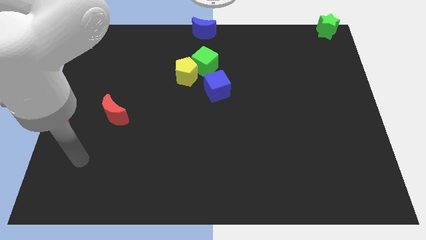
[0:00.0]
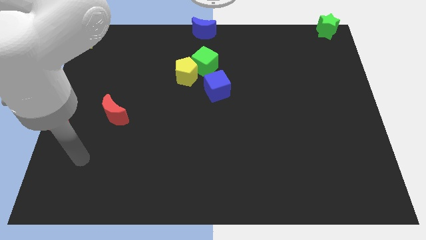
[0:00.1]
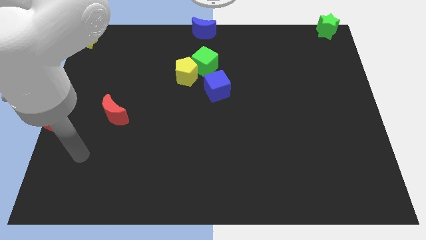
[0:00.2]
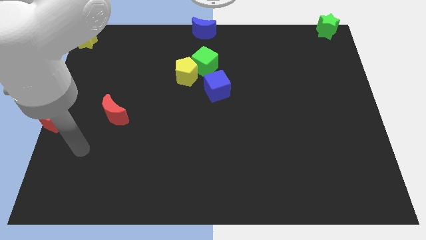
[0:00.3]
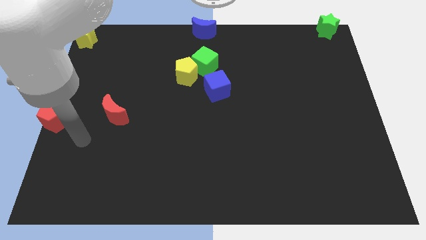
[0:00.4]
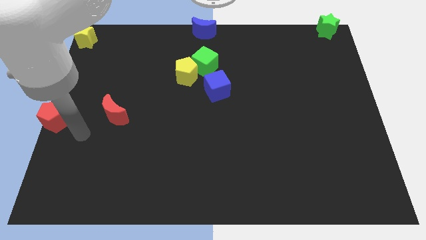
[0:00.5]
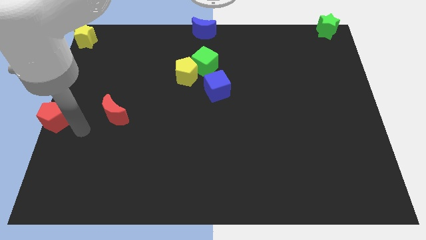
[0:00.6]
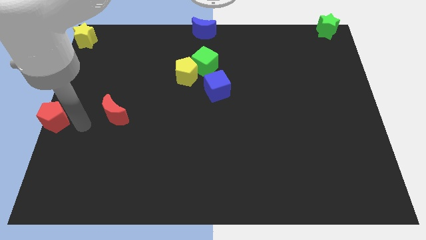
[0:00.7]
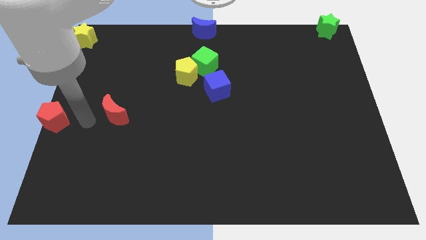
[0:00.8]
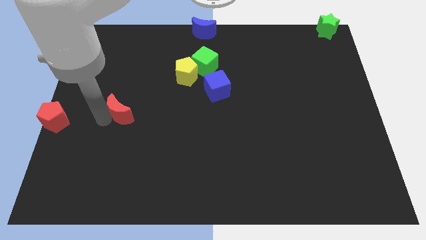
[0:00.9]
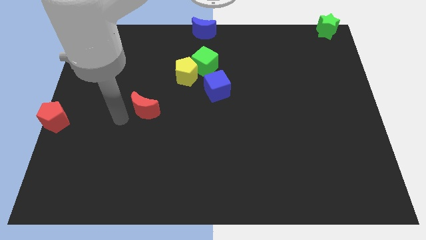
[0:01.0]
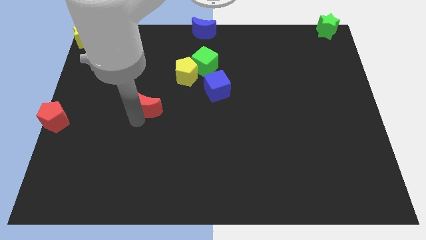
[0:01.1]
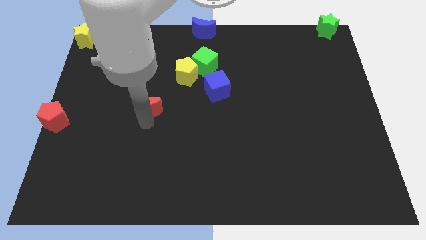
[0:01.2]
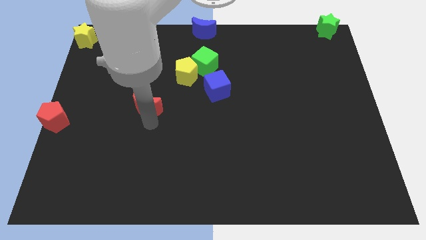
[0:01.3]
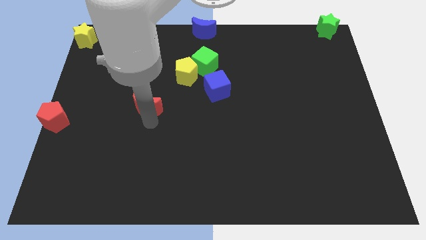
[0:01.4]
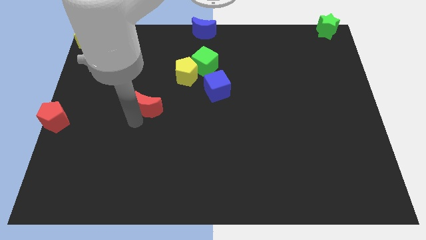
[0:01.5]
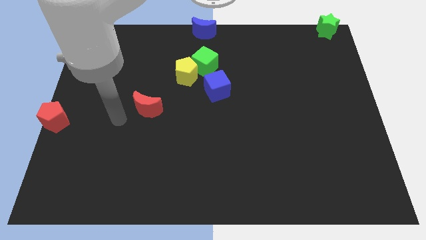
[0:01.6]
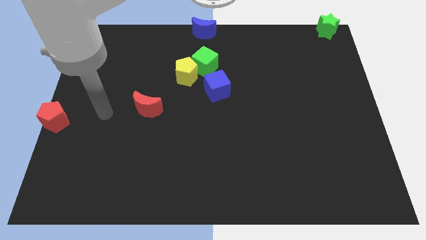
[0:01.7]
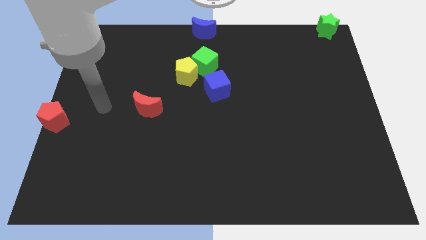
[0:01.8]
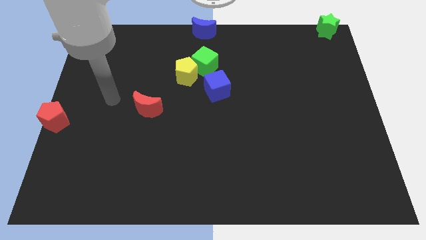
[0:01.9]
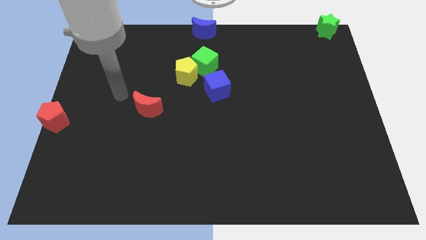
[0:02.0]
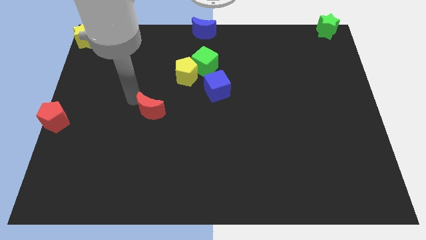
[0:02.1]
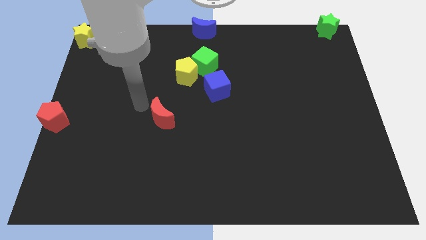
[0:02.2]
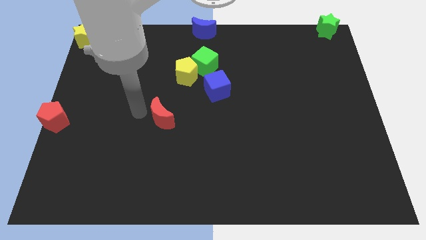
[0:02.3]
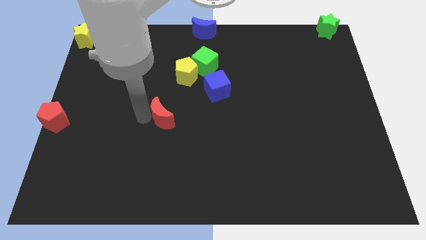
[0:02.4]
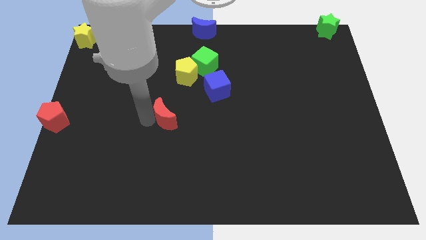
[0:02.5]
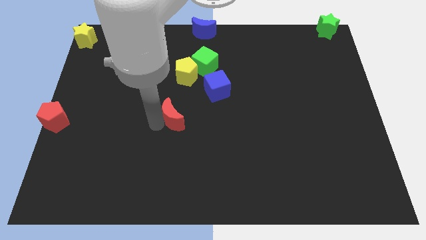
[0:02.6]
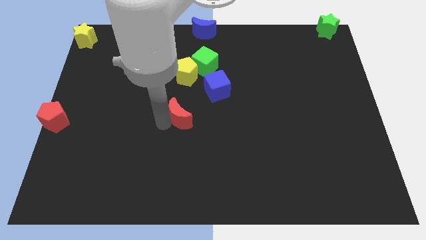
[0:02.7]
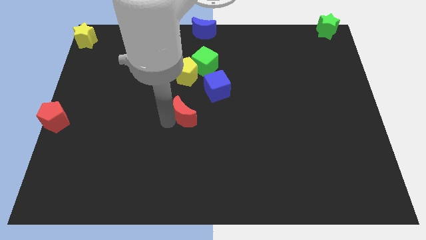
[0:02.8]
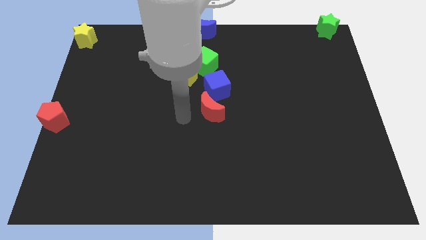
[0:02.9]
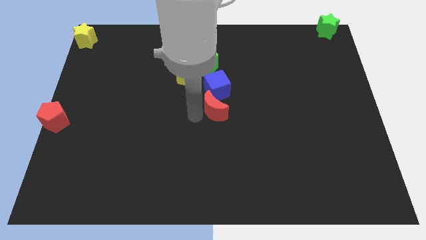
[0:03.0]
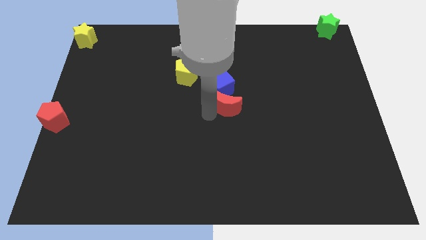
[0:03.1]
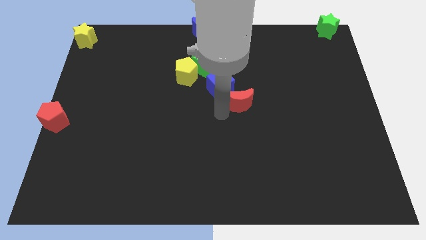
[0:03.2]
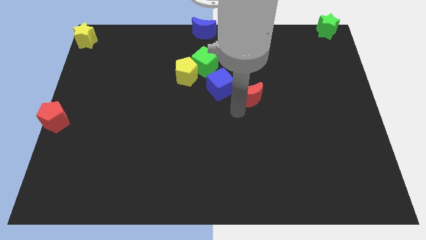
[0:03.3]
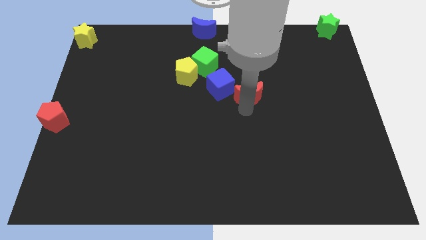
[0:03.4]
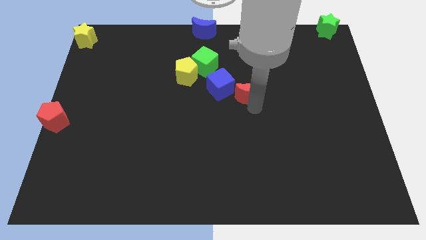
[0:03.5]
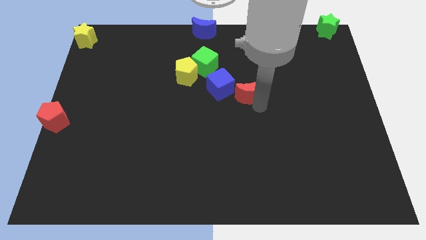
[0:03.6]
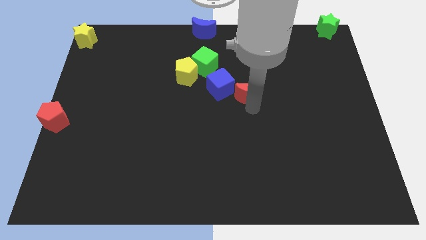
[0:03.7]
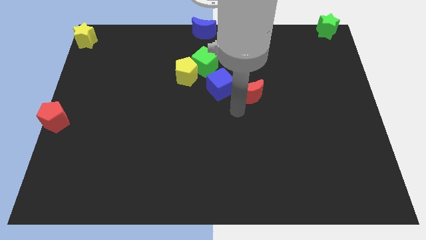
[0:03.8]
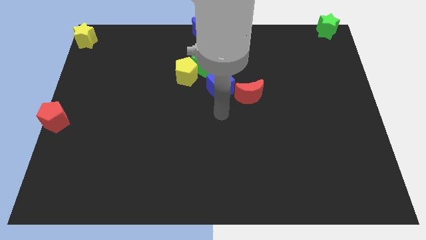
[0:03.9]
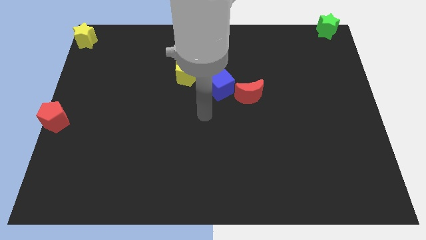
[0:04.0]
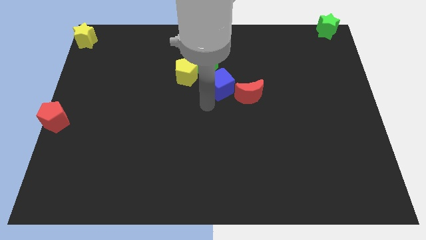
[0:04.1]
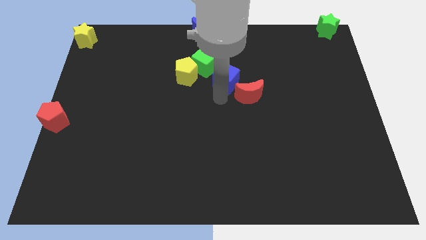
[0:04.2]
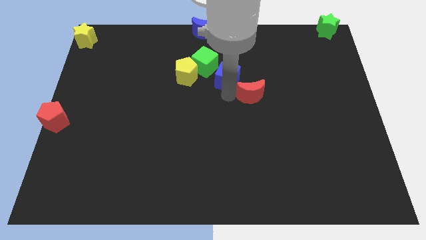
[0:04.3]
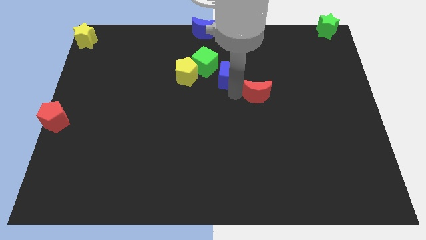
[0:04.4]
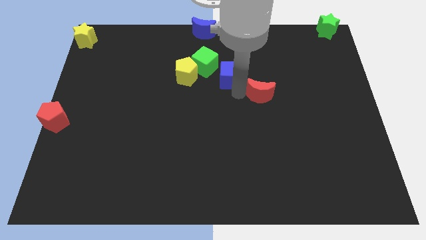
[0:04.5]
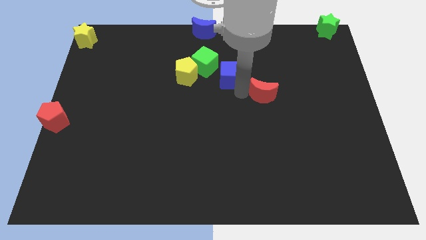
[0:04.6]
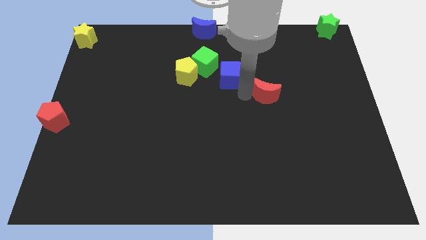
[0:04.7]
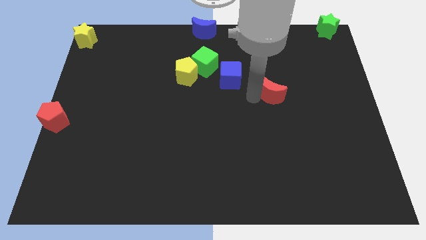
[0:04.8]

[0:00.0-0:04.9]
move the red crescent to the bottom right of blue cube

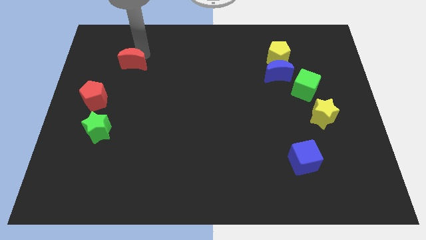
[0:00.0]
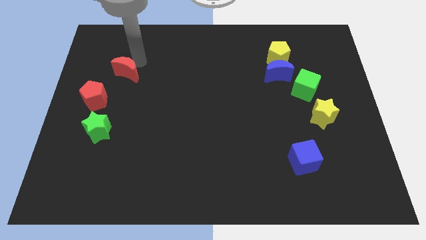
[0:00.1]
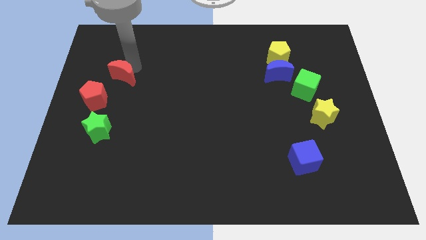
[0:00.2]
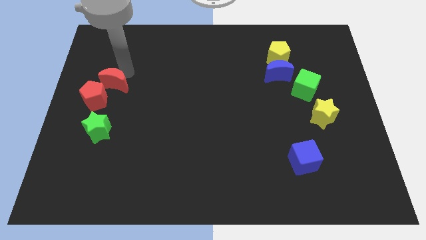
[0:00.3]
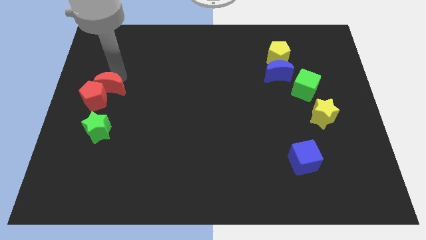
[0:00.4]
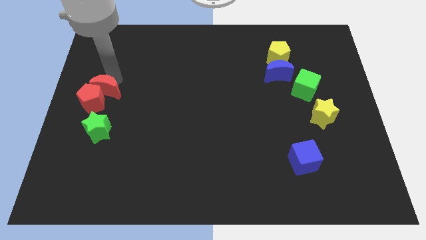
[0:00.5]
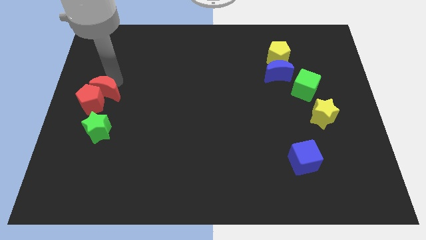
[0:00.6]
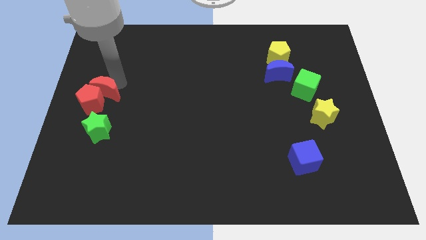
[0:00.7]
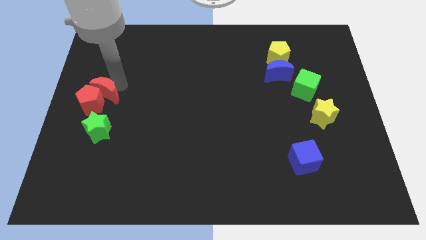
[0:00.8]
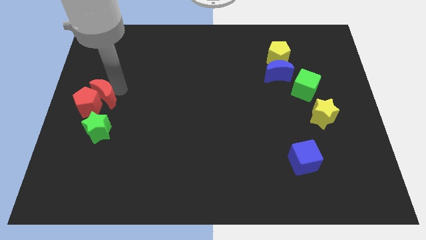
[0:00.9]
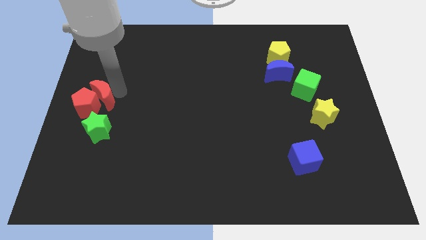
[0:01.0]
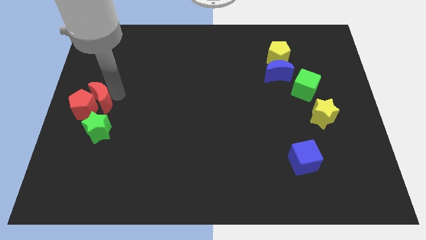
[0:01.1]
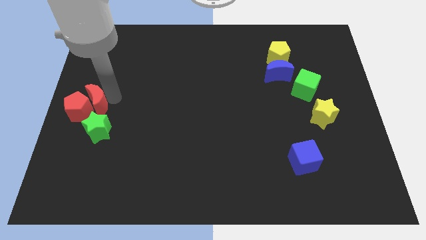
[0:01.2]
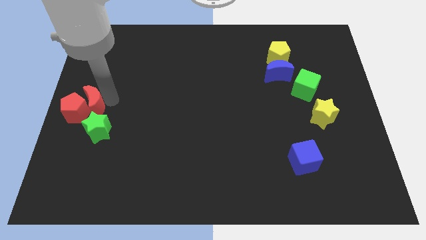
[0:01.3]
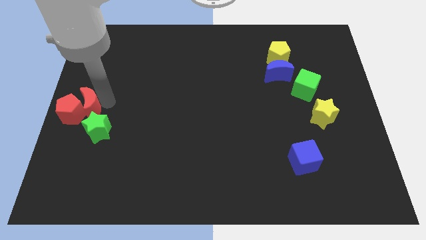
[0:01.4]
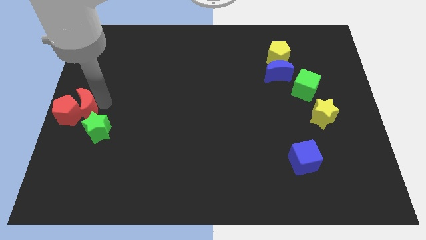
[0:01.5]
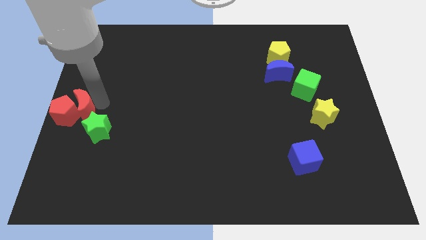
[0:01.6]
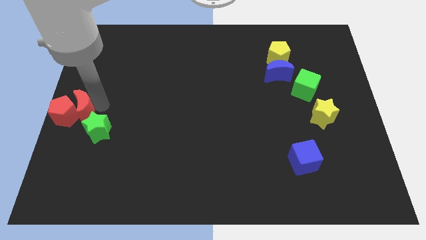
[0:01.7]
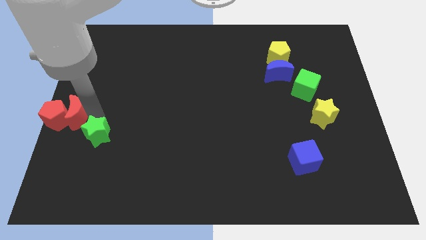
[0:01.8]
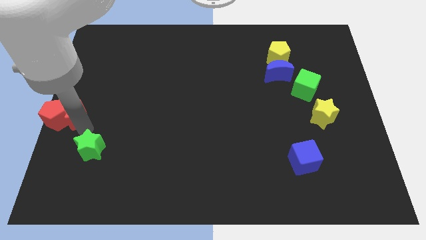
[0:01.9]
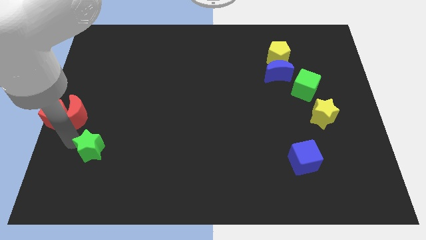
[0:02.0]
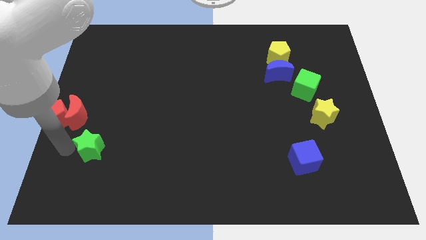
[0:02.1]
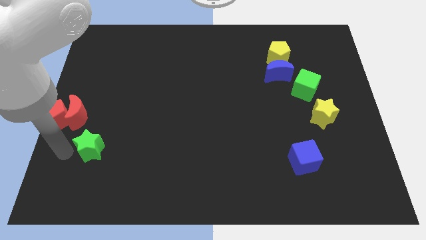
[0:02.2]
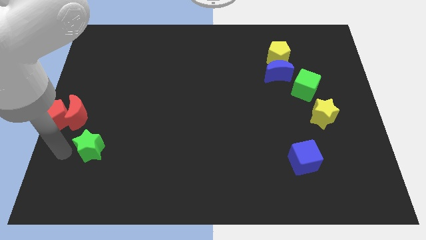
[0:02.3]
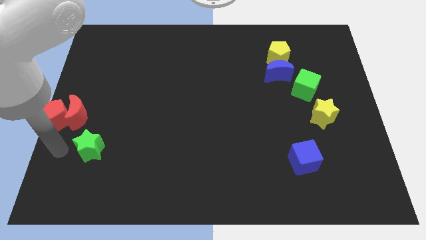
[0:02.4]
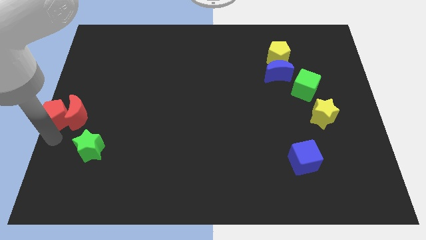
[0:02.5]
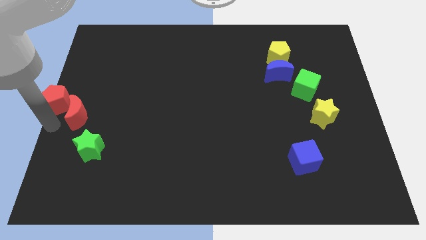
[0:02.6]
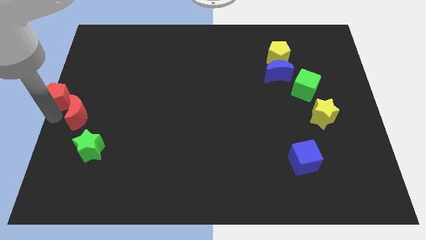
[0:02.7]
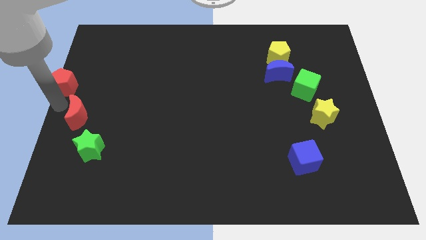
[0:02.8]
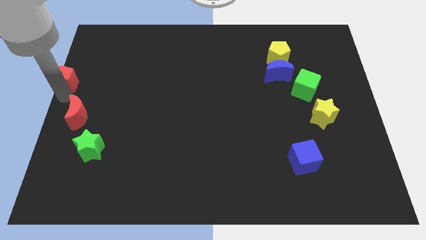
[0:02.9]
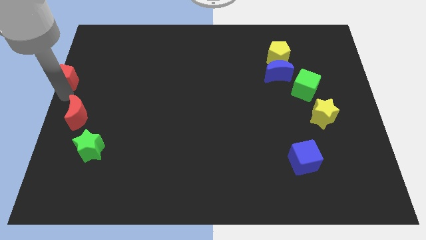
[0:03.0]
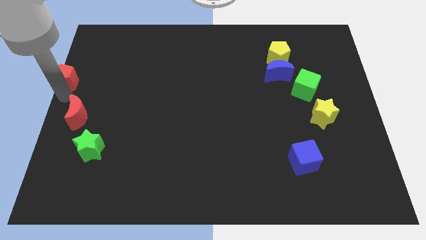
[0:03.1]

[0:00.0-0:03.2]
move red moon and red pentagon to the center left

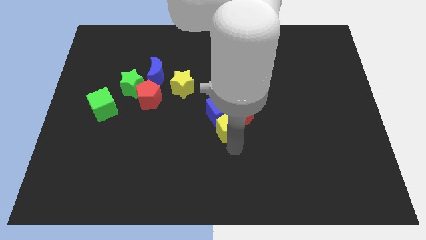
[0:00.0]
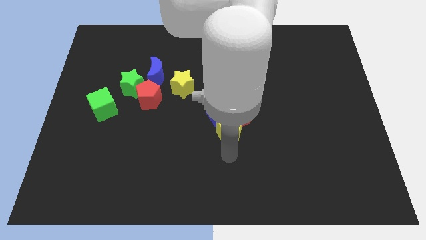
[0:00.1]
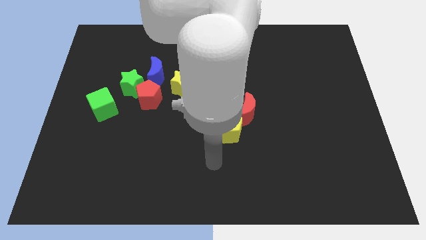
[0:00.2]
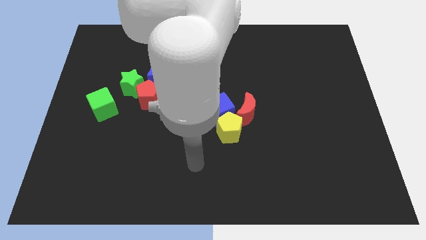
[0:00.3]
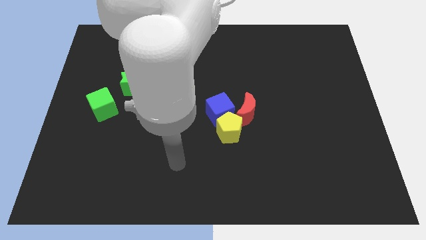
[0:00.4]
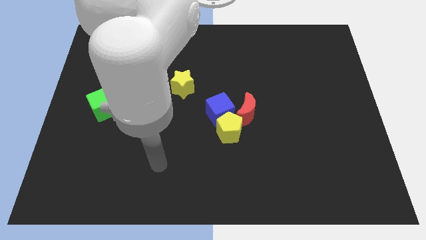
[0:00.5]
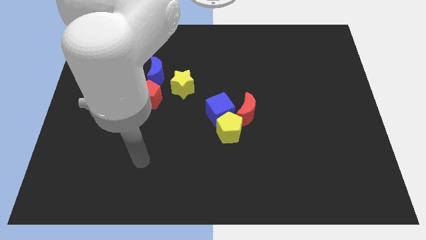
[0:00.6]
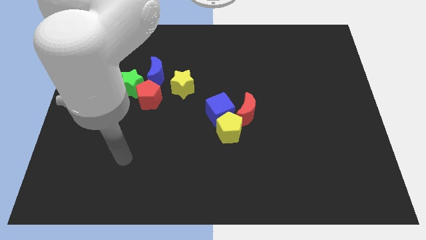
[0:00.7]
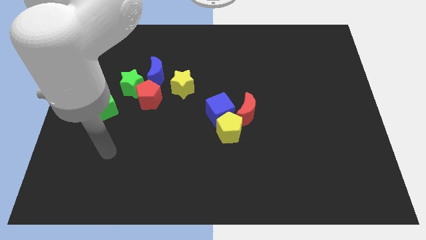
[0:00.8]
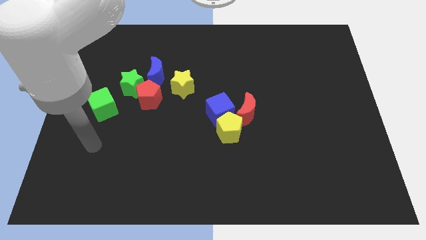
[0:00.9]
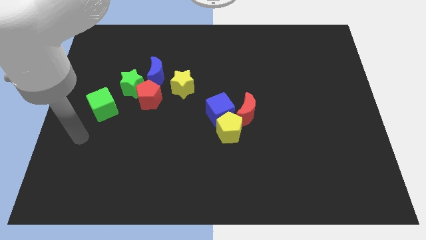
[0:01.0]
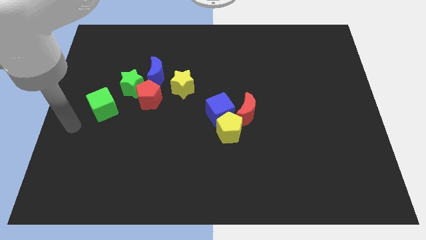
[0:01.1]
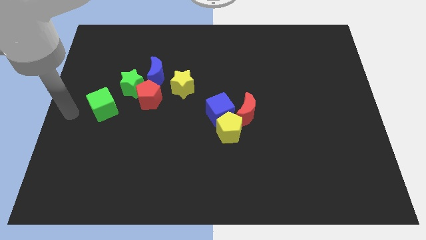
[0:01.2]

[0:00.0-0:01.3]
move your arm to the left side of the green cube
